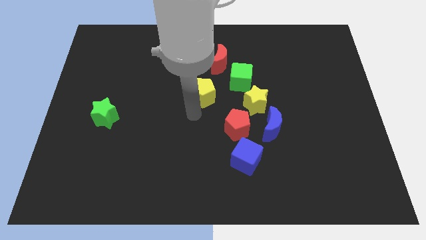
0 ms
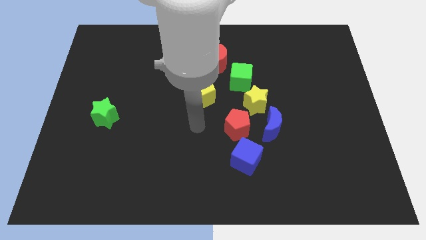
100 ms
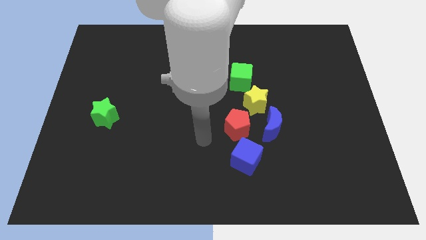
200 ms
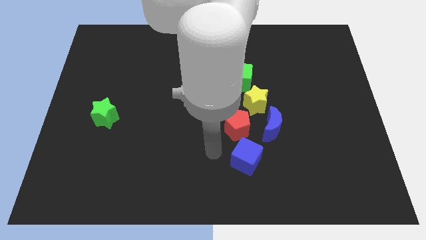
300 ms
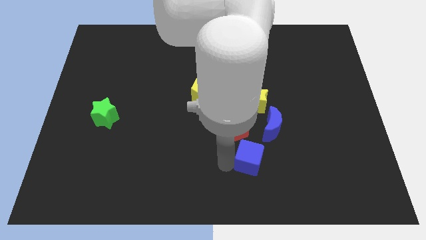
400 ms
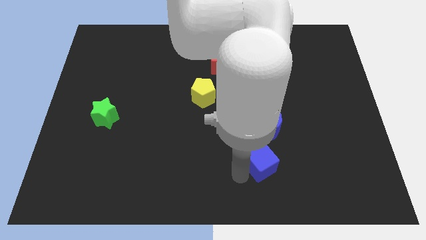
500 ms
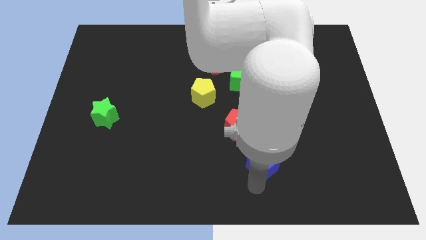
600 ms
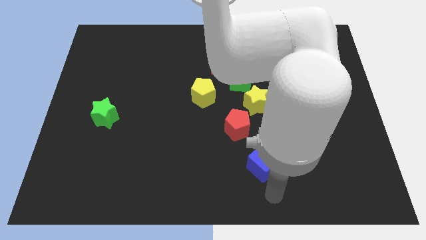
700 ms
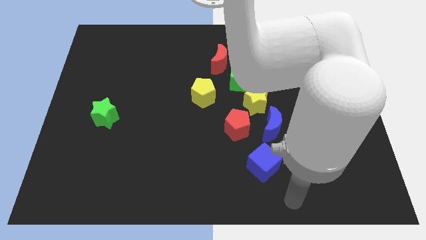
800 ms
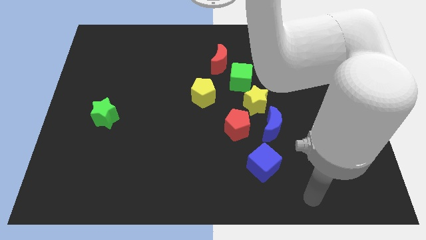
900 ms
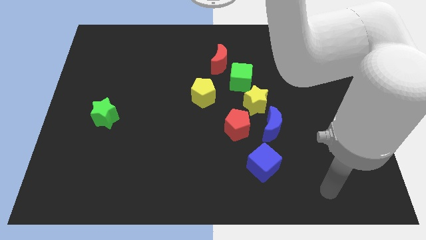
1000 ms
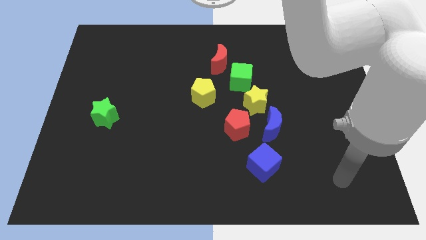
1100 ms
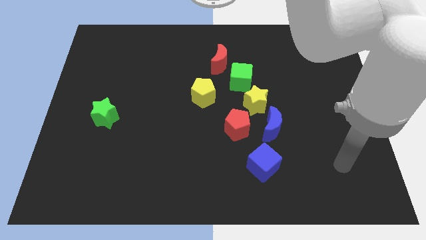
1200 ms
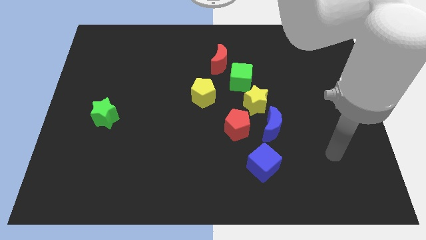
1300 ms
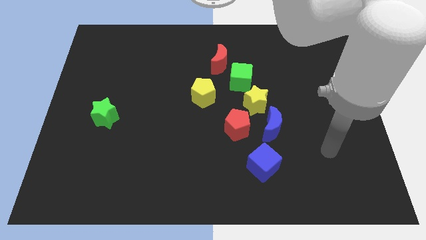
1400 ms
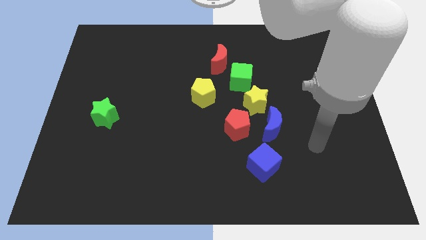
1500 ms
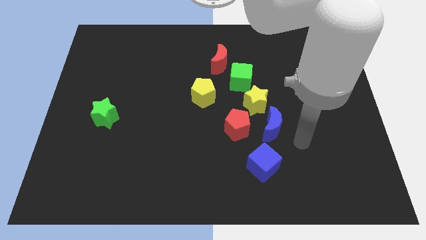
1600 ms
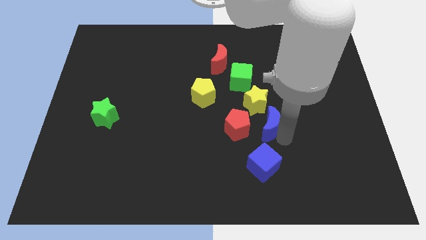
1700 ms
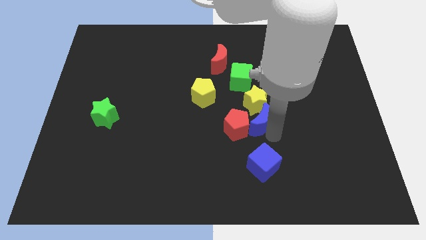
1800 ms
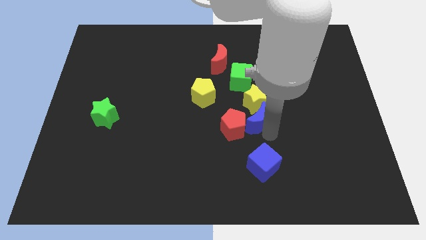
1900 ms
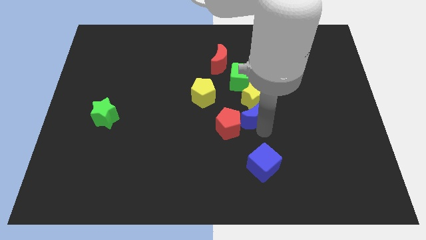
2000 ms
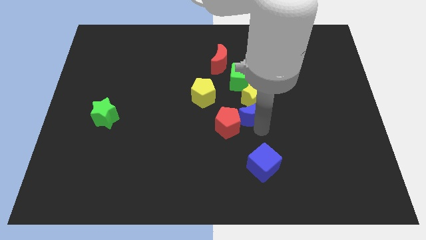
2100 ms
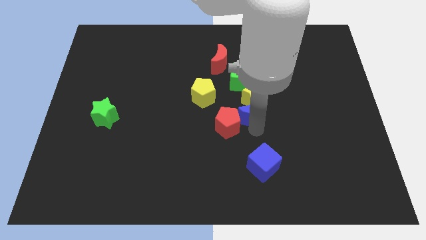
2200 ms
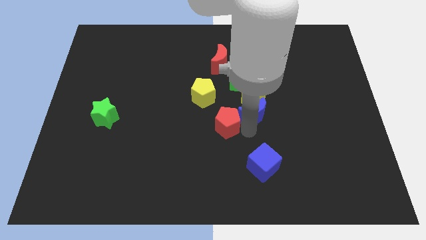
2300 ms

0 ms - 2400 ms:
push the blue crescent into yellow star

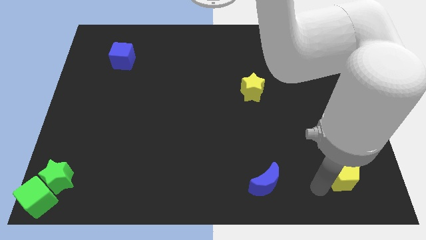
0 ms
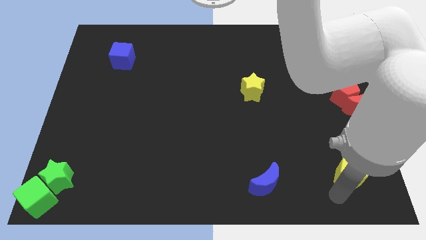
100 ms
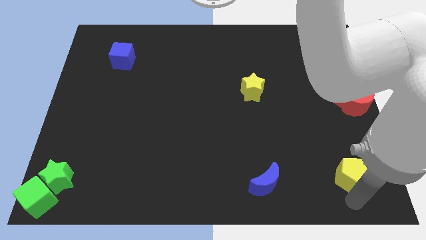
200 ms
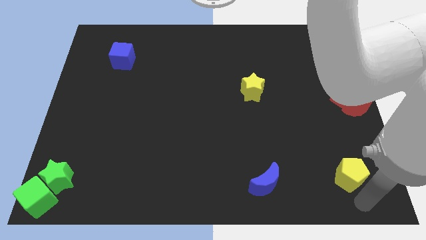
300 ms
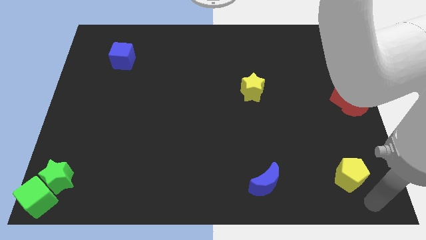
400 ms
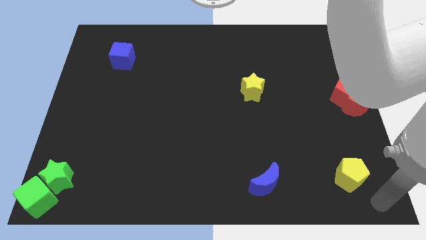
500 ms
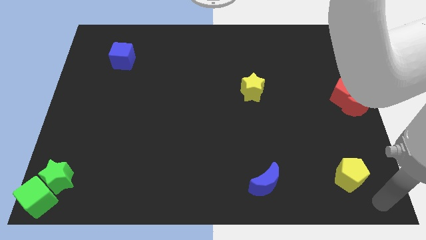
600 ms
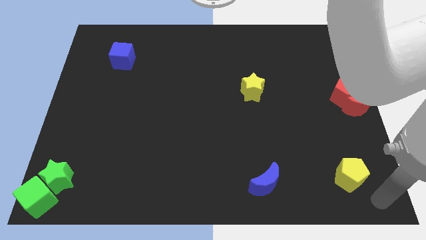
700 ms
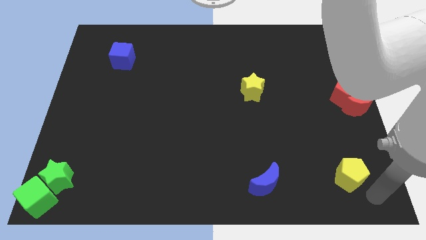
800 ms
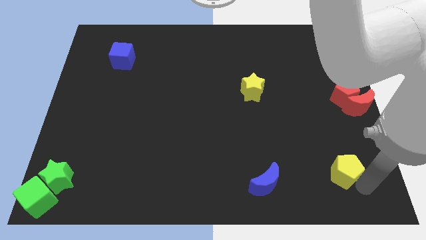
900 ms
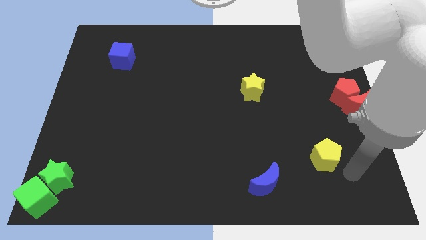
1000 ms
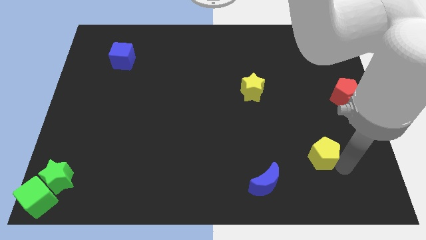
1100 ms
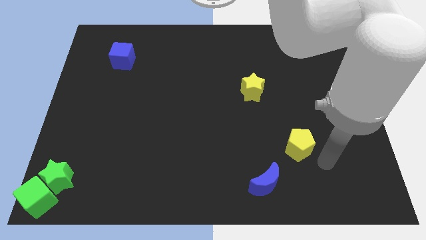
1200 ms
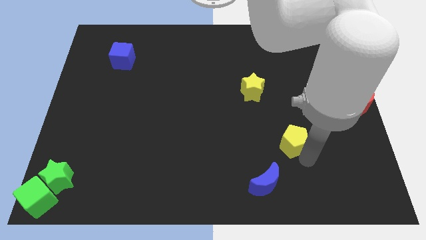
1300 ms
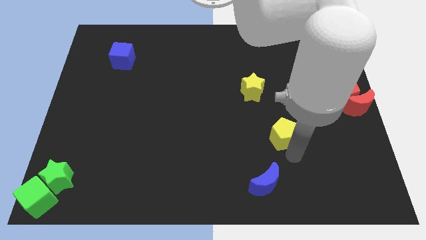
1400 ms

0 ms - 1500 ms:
push the yellow pentagon diagonally top right to blue moon

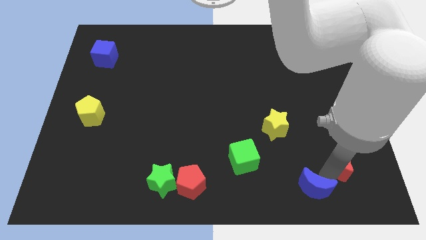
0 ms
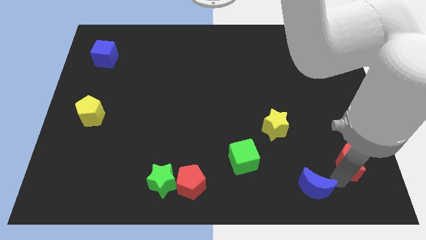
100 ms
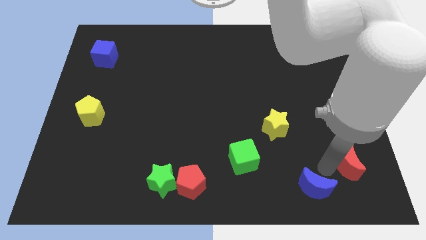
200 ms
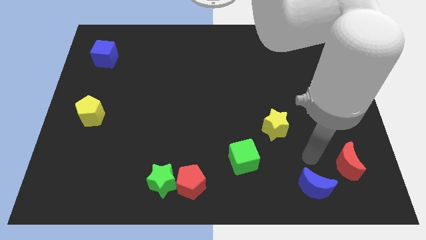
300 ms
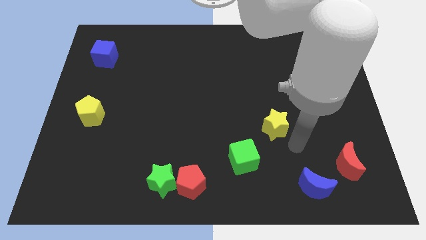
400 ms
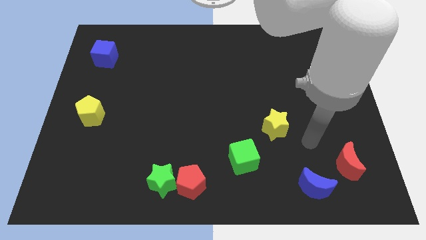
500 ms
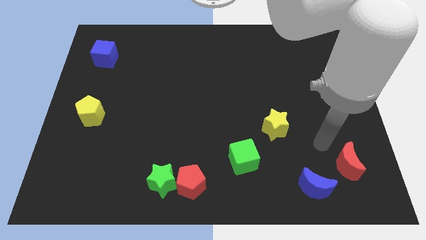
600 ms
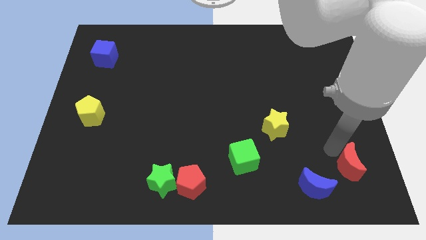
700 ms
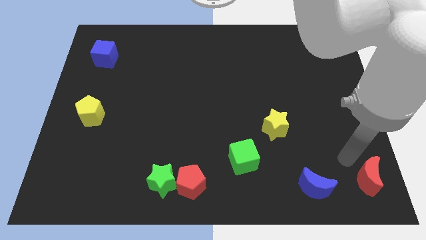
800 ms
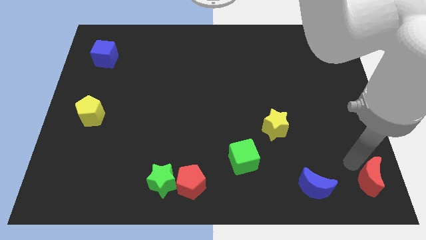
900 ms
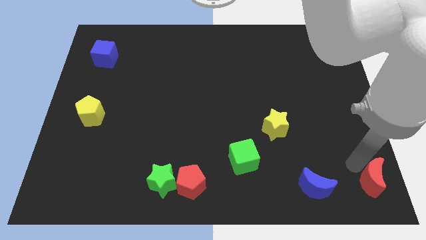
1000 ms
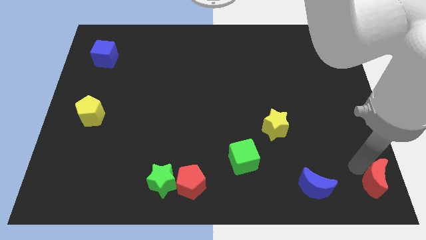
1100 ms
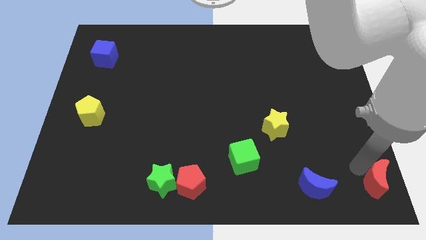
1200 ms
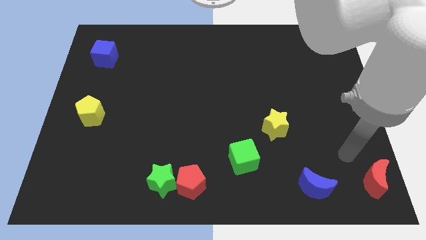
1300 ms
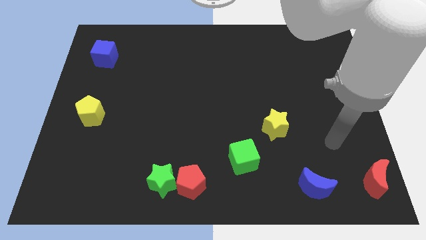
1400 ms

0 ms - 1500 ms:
move the red moon to the bottom right side

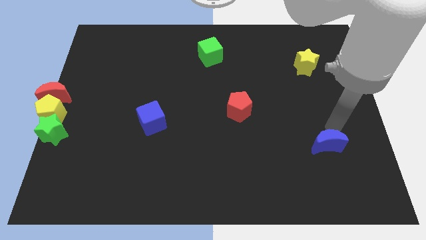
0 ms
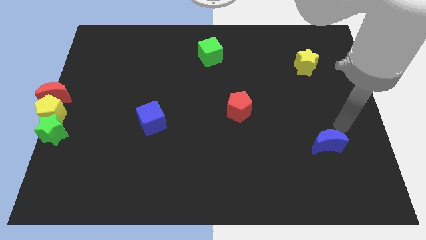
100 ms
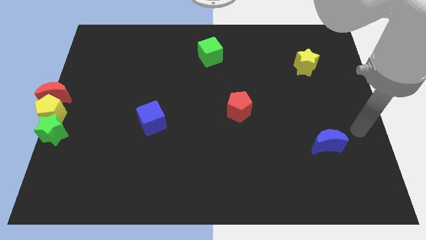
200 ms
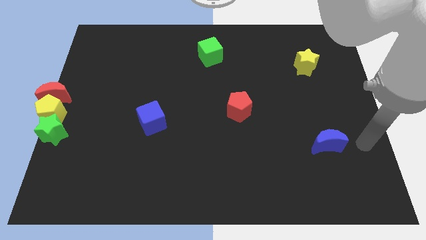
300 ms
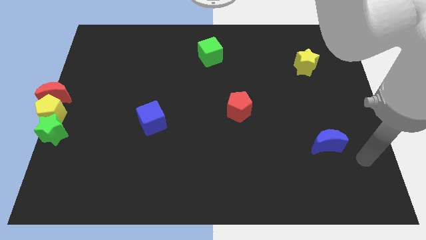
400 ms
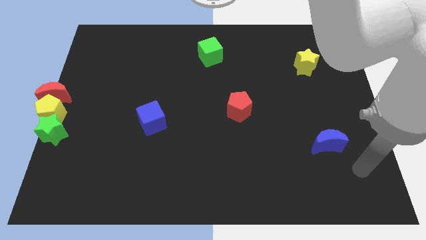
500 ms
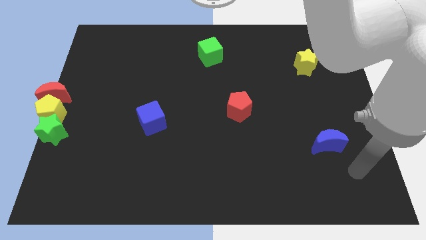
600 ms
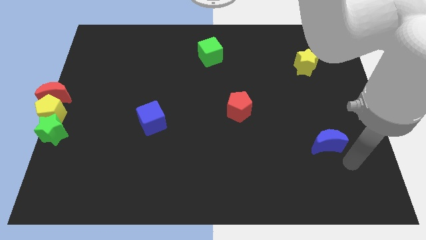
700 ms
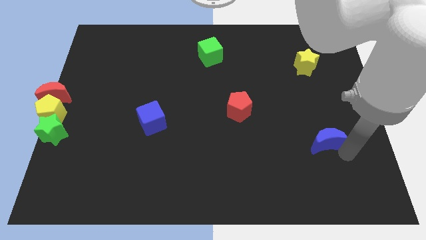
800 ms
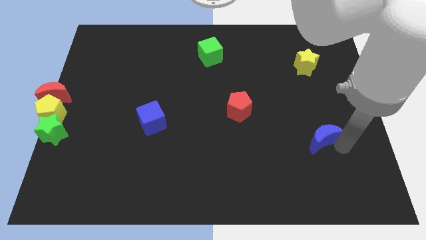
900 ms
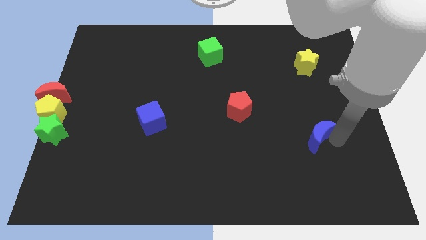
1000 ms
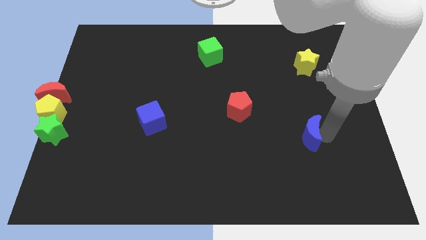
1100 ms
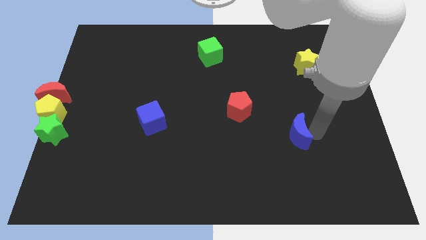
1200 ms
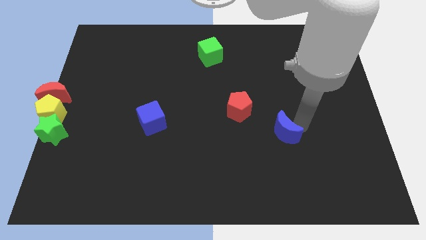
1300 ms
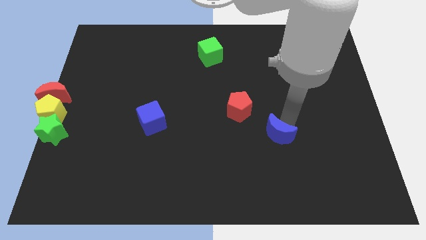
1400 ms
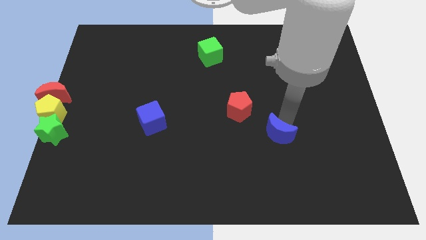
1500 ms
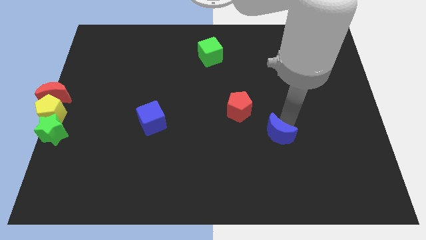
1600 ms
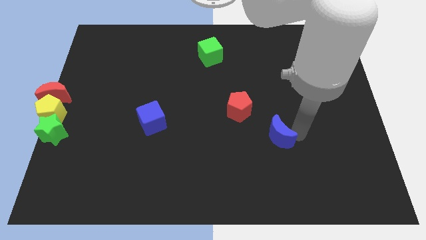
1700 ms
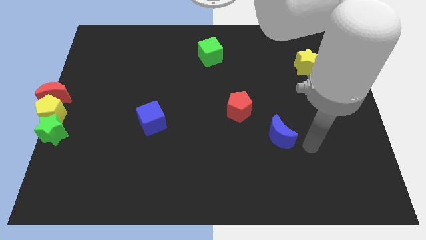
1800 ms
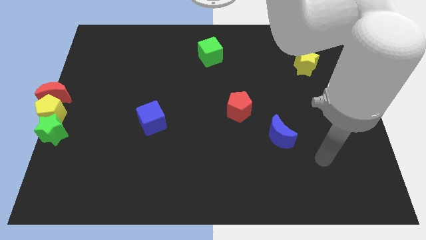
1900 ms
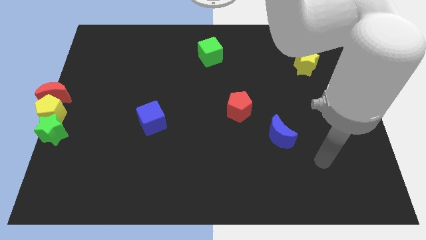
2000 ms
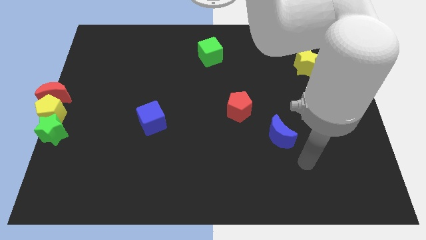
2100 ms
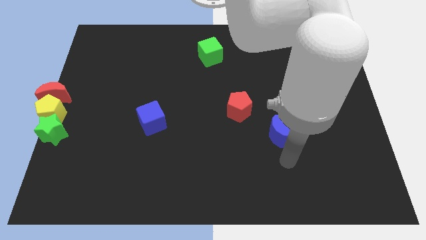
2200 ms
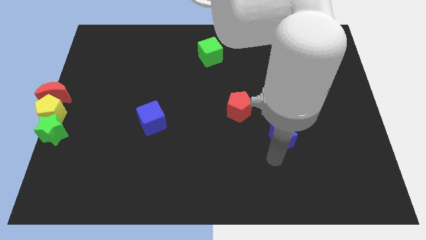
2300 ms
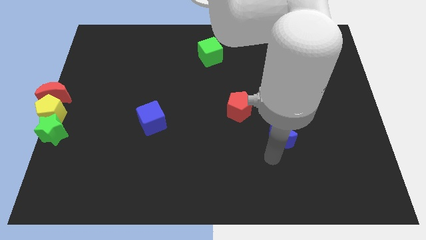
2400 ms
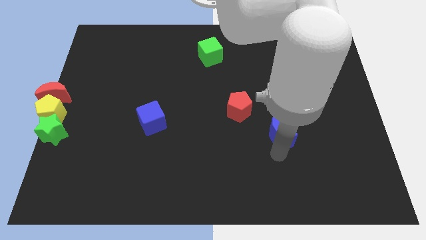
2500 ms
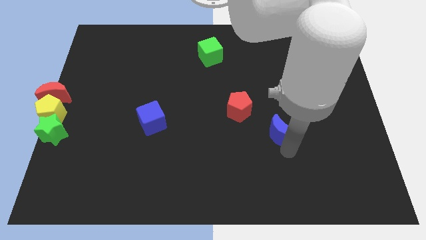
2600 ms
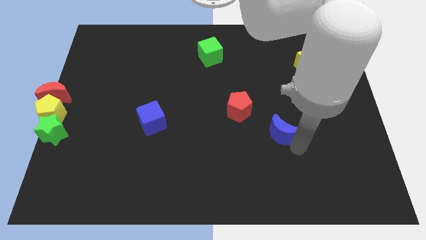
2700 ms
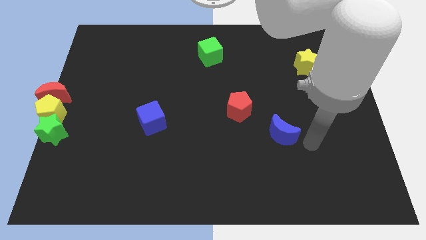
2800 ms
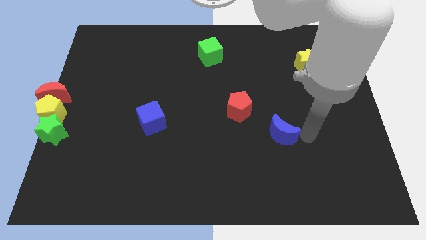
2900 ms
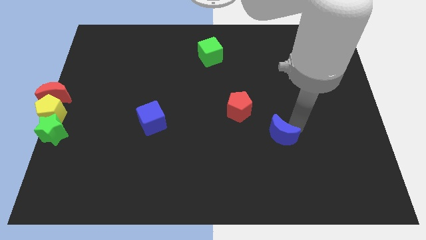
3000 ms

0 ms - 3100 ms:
place the blue moon at the bottom right side of the red pentagon

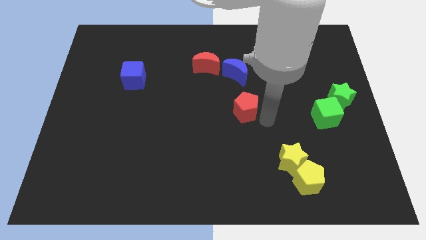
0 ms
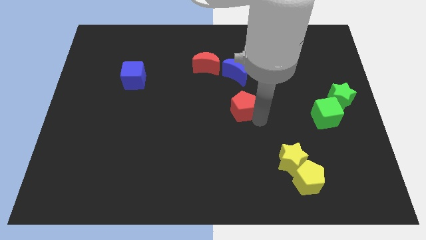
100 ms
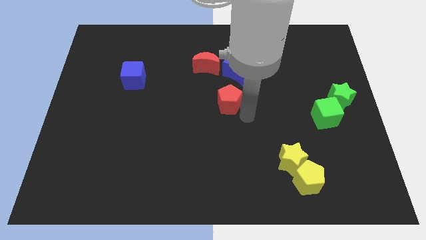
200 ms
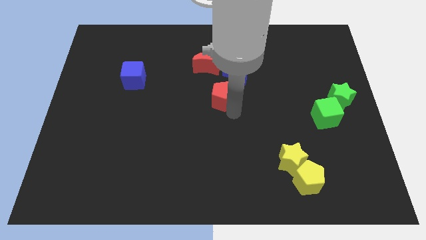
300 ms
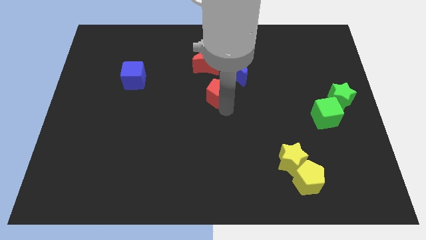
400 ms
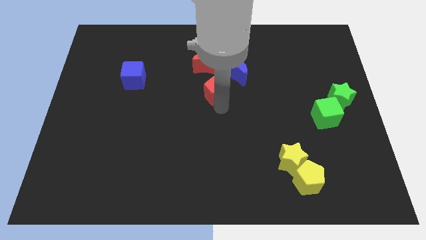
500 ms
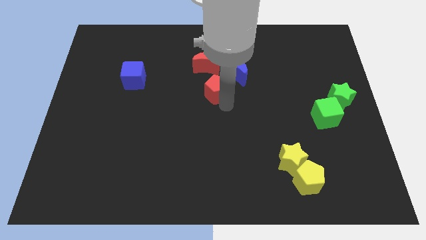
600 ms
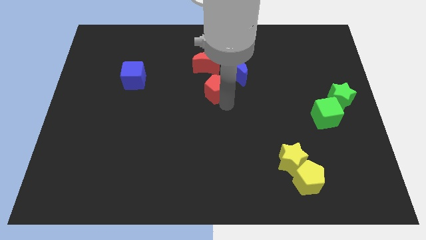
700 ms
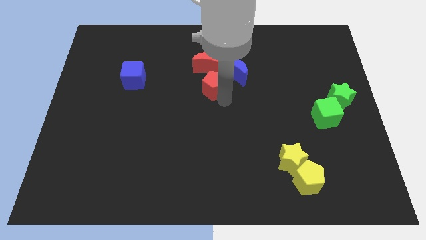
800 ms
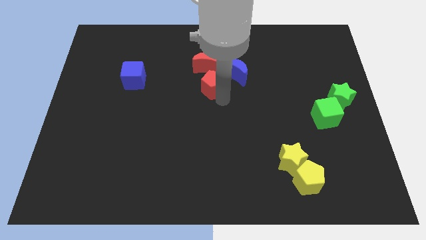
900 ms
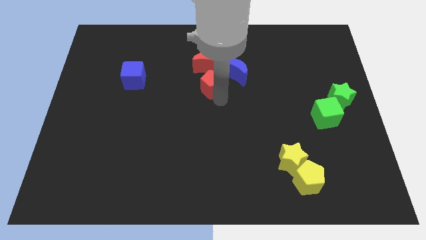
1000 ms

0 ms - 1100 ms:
place the red pentagon below the red crescent
